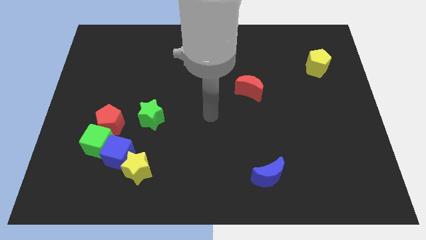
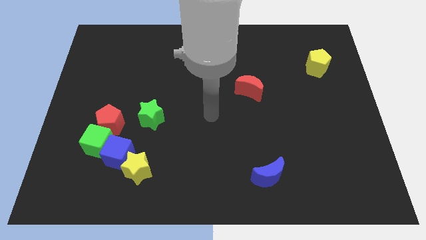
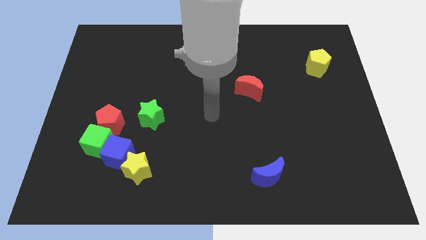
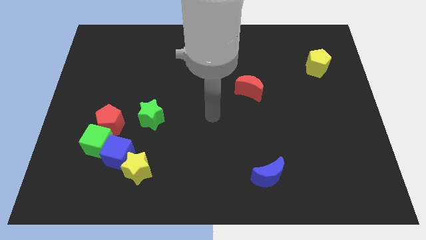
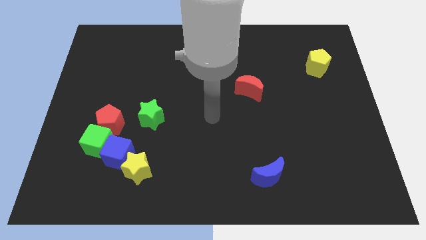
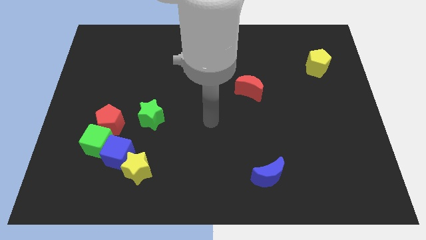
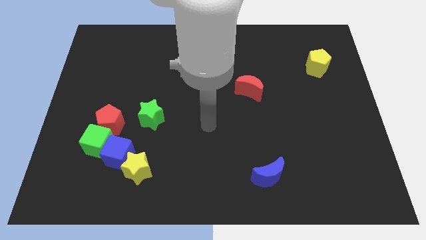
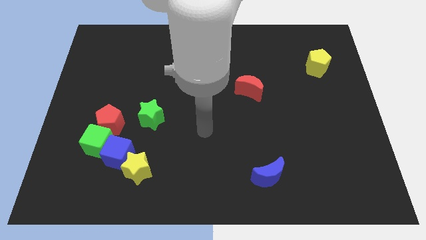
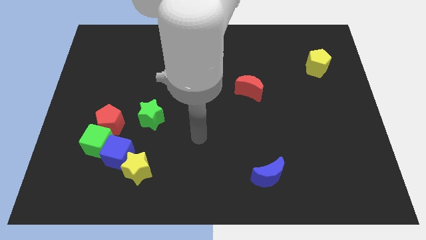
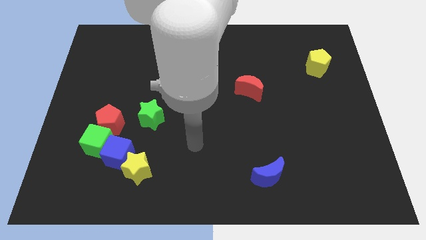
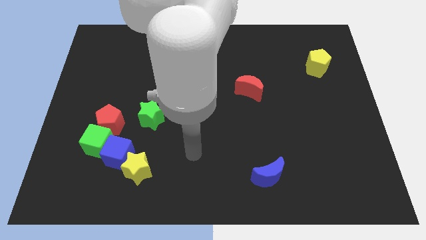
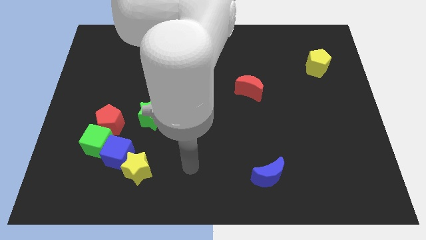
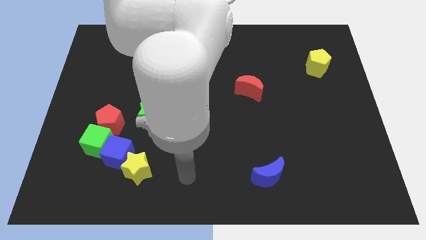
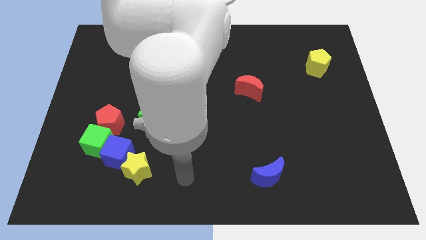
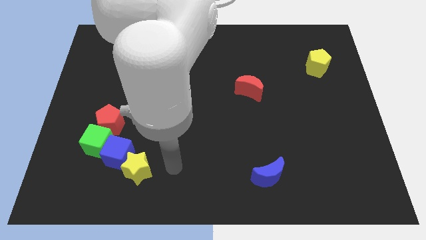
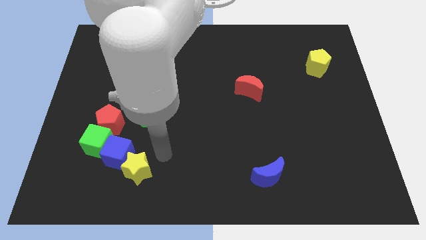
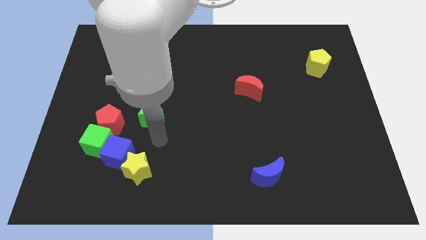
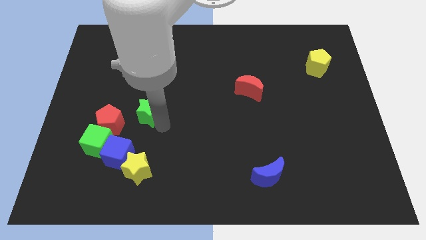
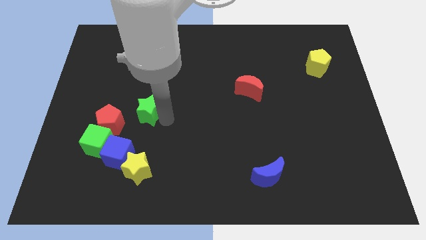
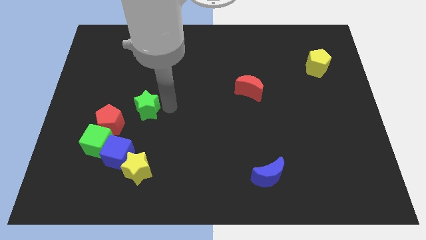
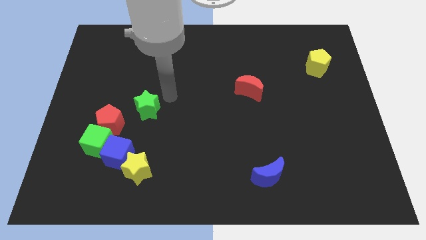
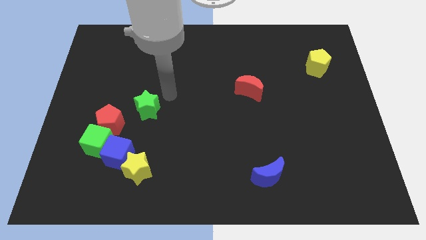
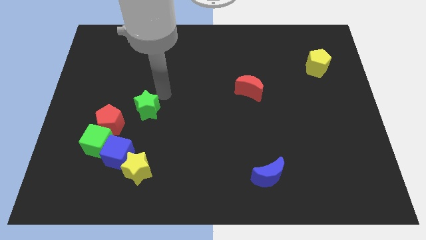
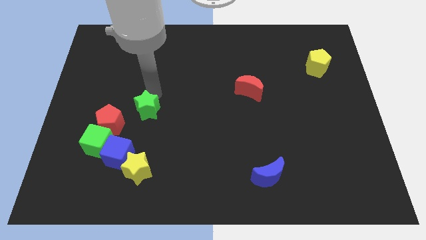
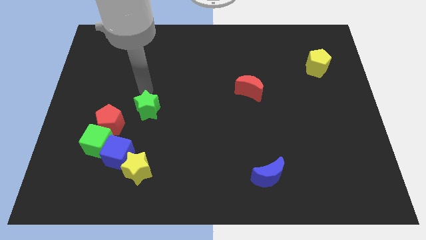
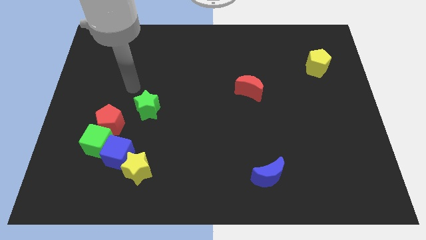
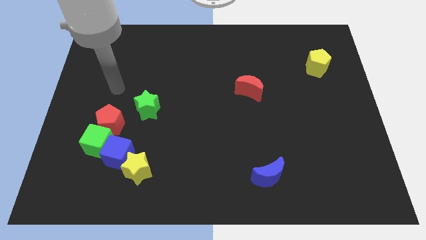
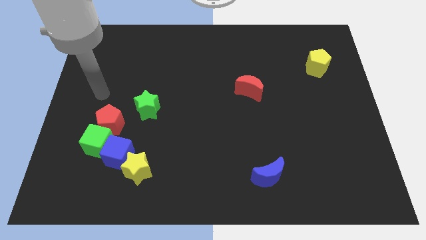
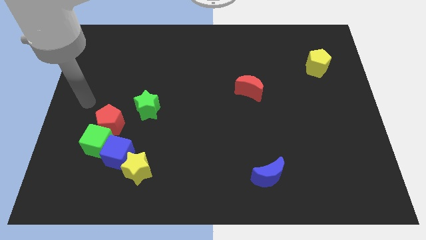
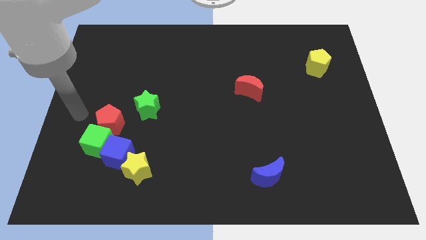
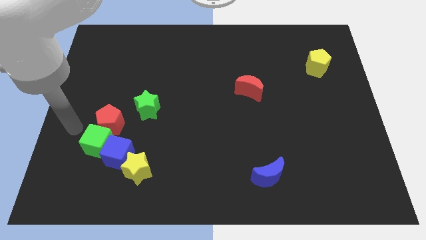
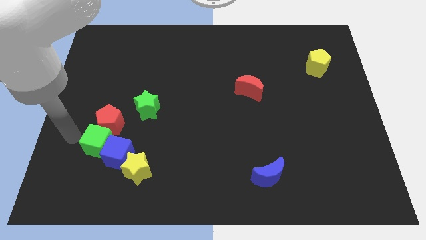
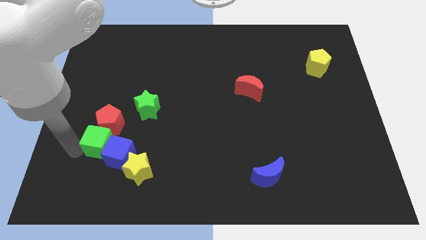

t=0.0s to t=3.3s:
push the green star slightly upwards

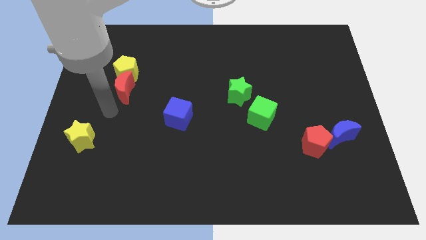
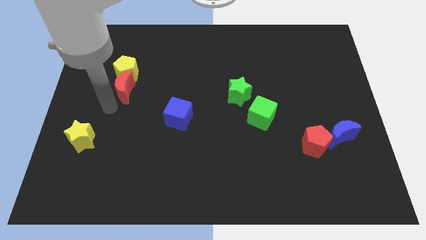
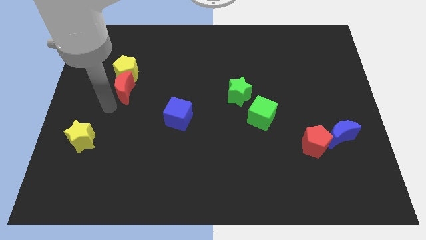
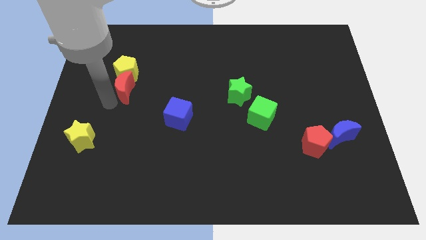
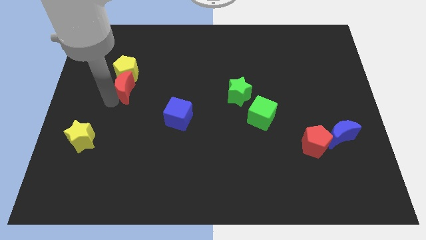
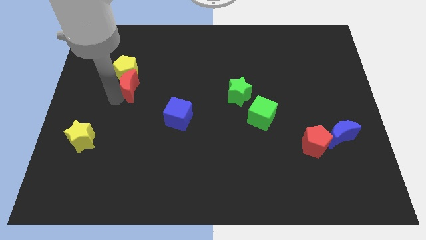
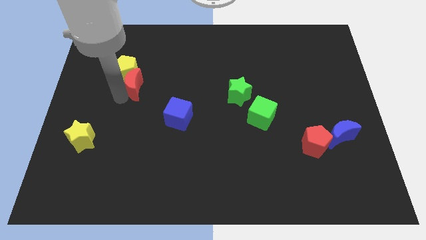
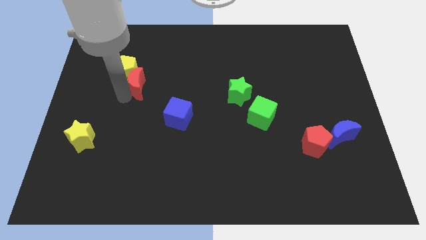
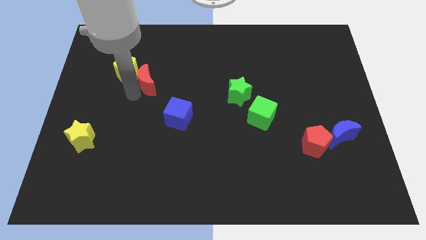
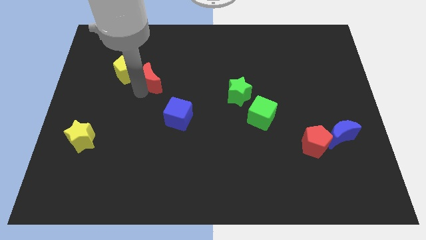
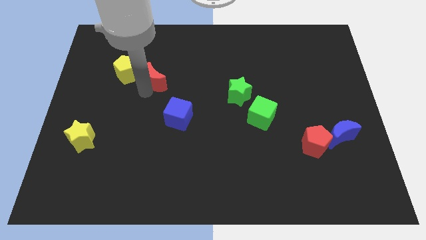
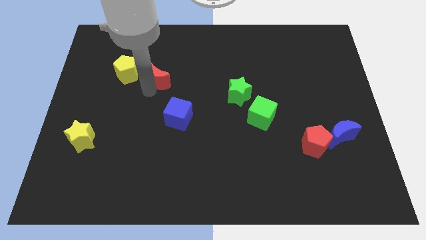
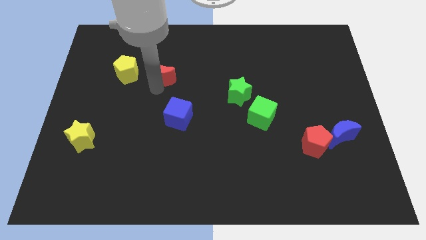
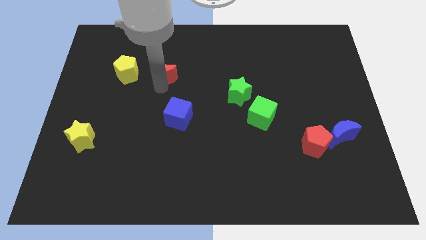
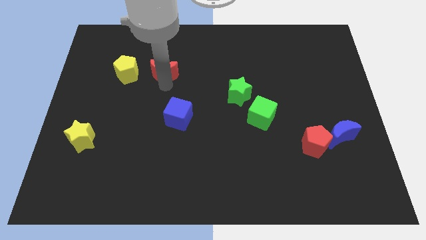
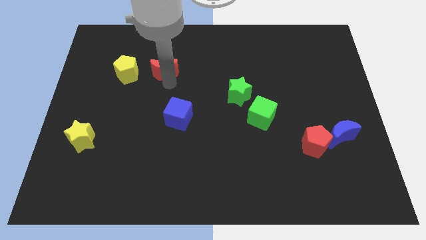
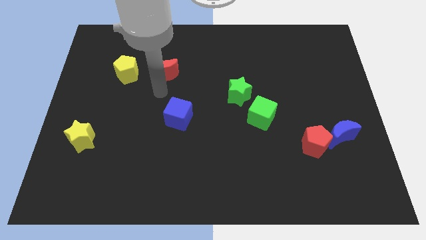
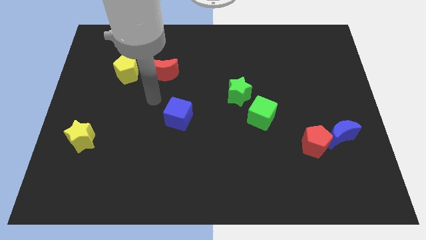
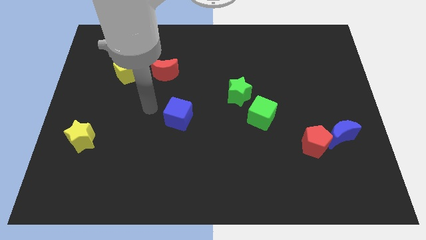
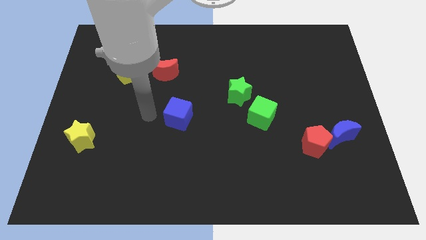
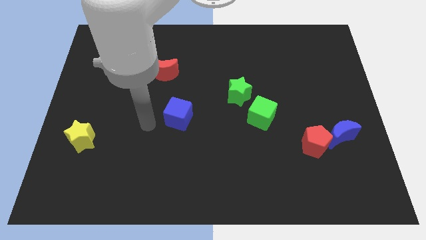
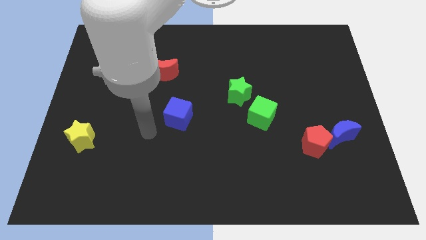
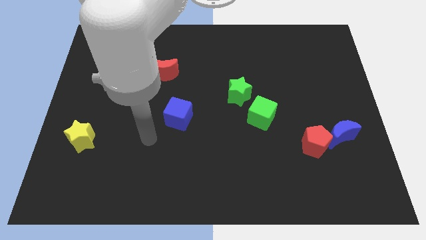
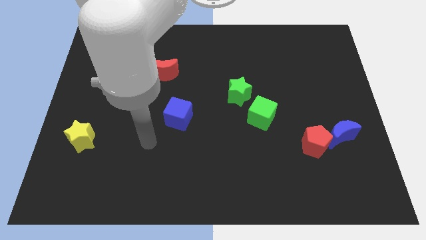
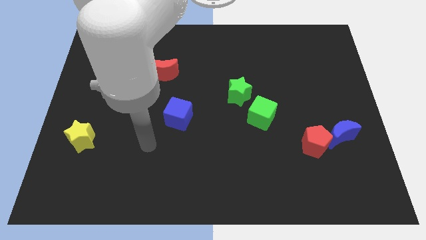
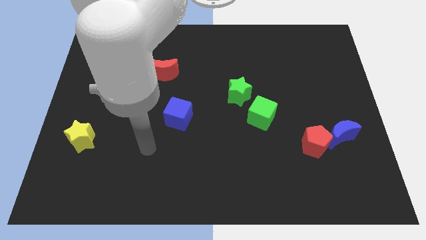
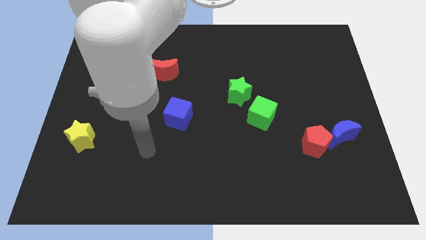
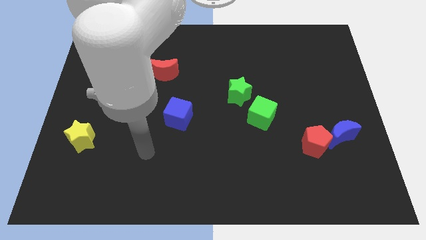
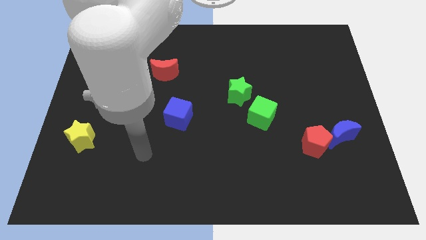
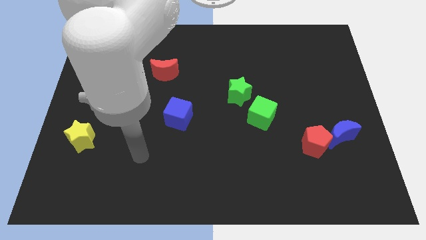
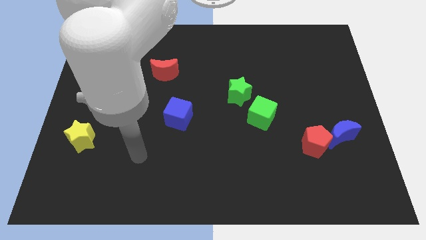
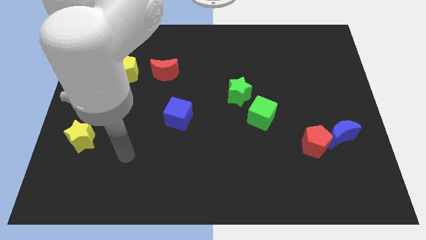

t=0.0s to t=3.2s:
place the red moon above the blue cube

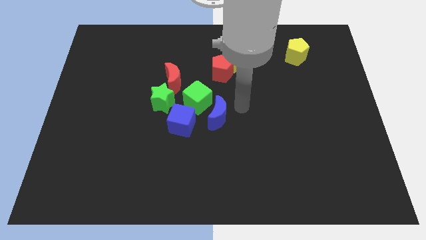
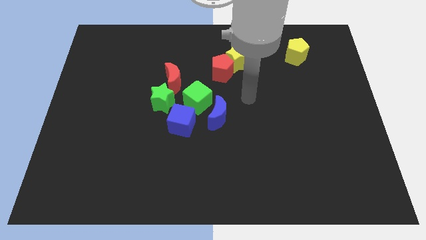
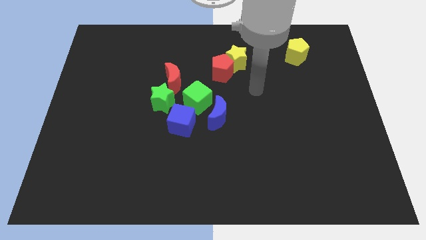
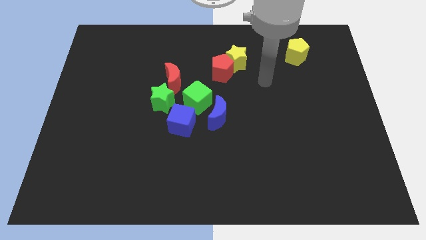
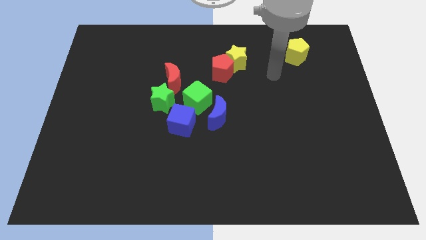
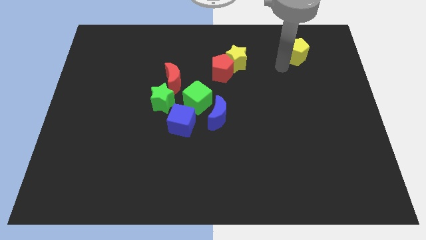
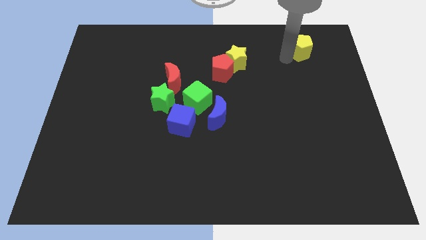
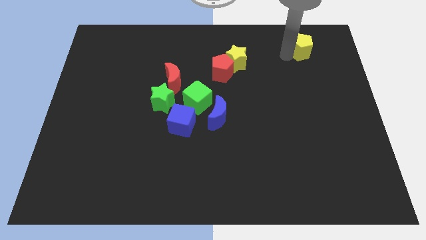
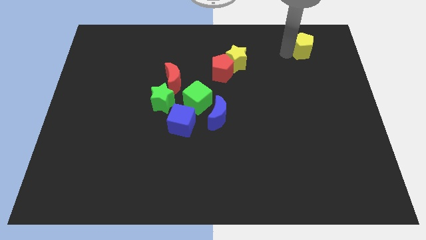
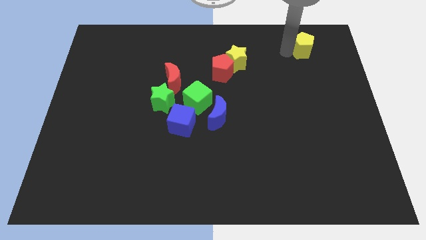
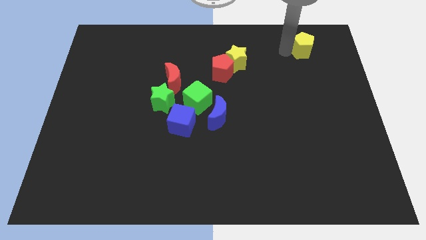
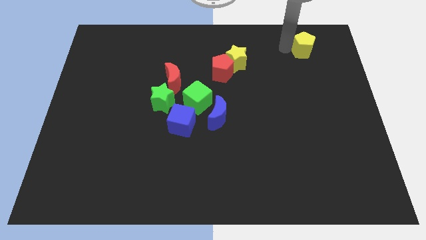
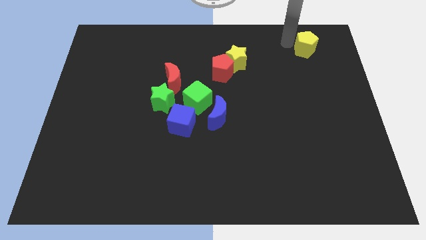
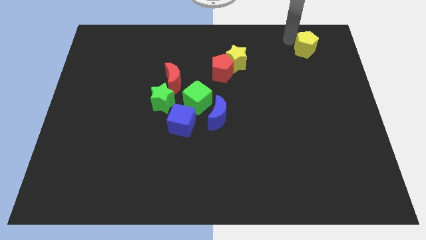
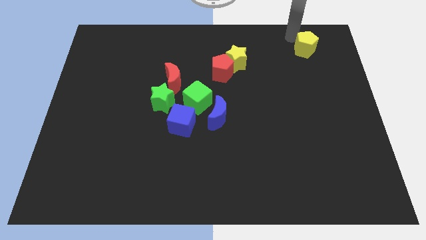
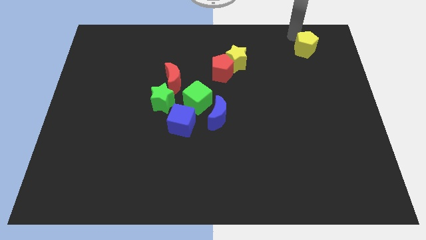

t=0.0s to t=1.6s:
slightly push yellow pentagon to the top right

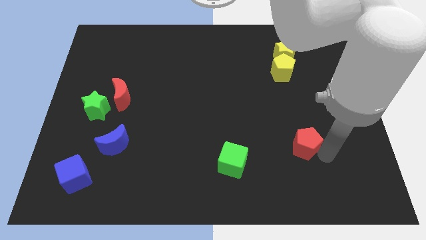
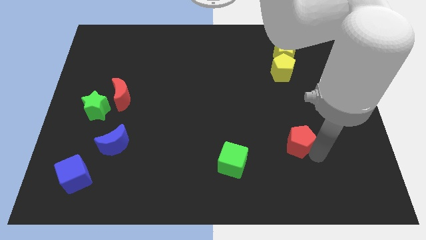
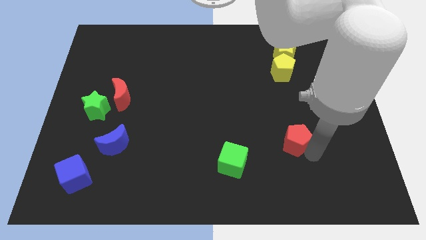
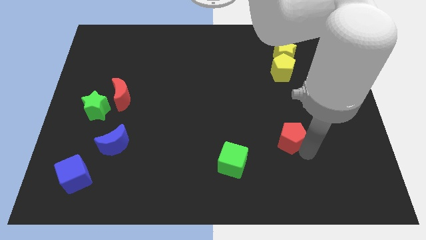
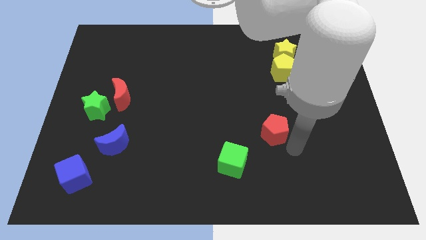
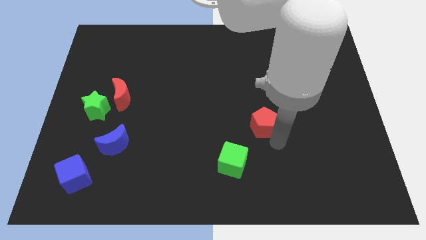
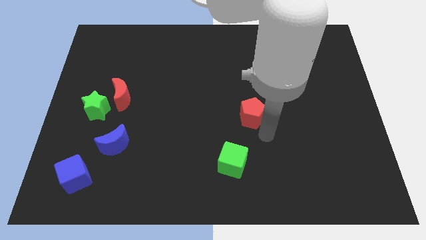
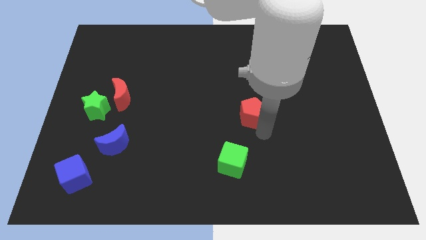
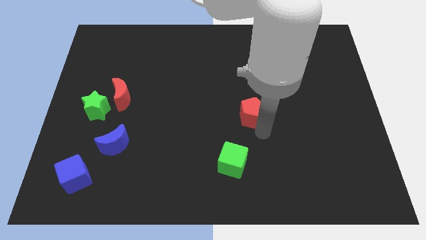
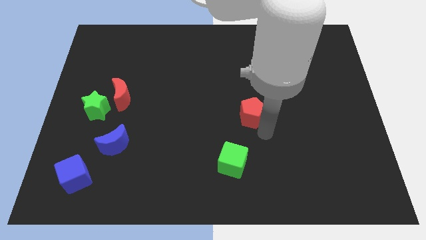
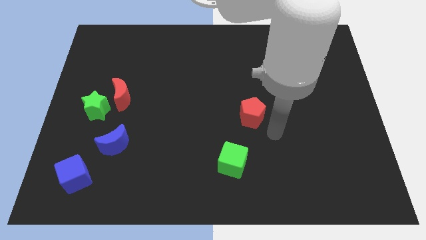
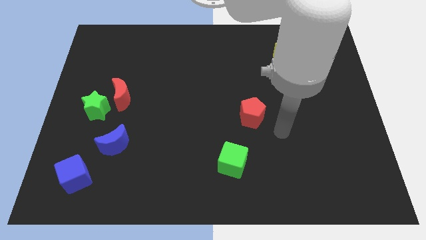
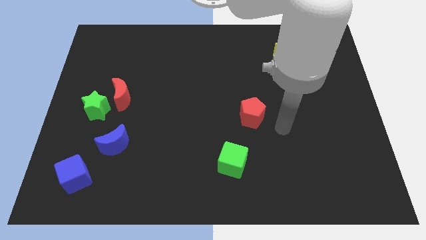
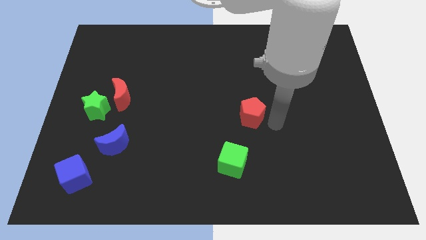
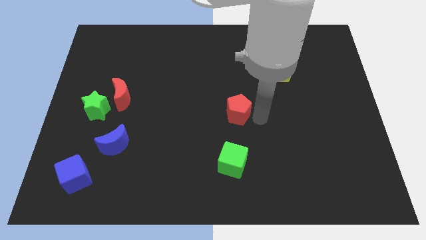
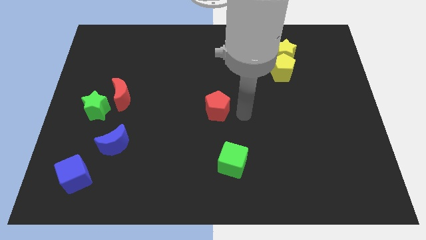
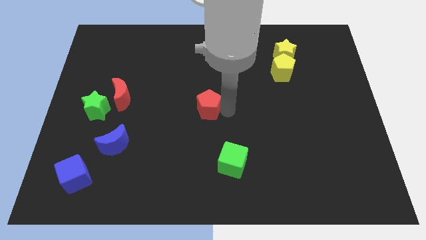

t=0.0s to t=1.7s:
push the red pentagon to the left side of the board
